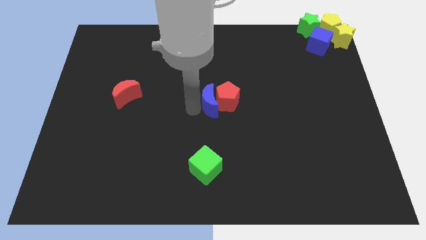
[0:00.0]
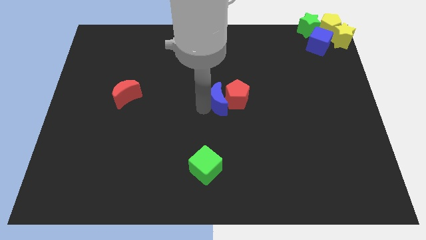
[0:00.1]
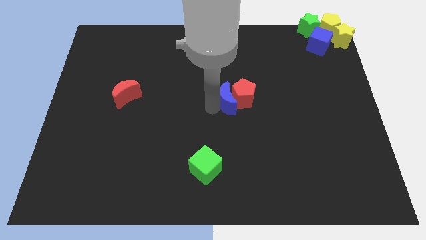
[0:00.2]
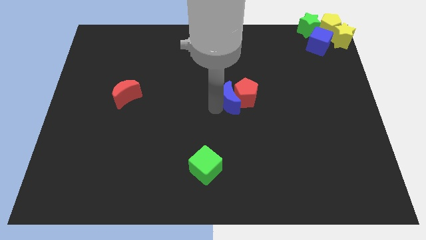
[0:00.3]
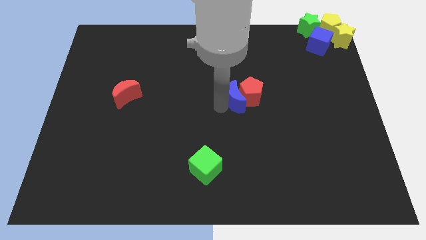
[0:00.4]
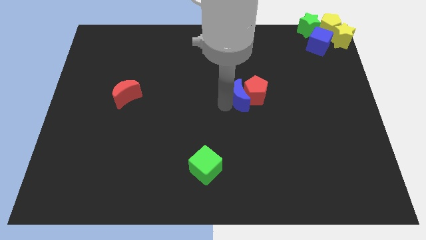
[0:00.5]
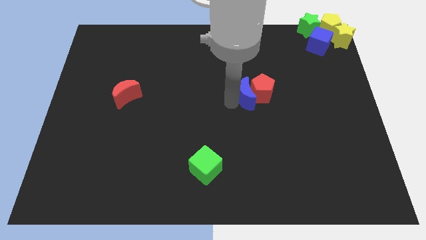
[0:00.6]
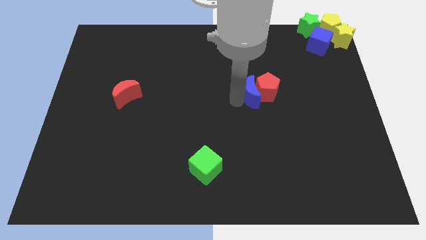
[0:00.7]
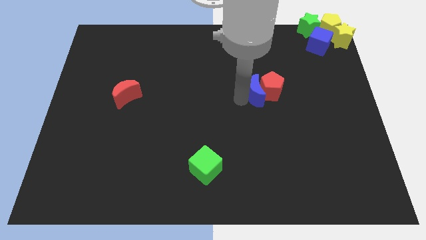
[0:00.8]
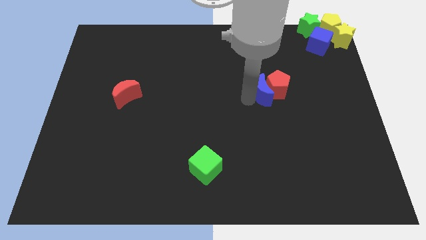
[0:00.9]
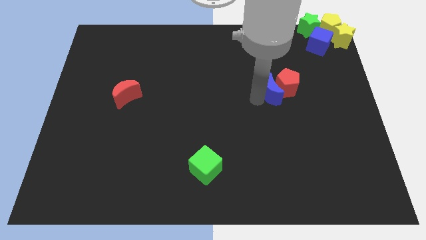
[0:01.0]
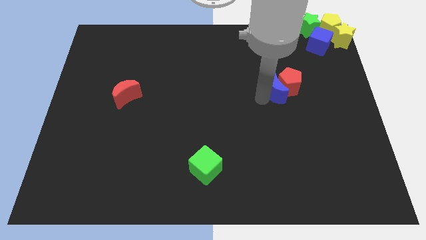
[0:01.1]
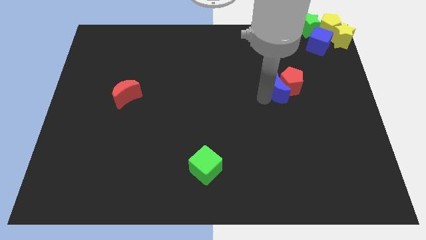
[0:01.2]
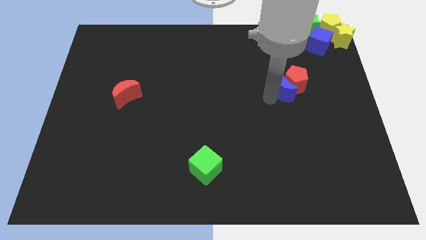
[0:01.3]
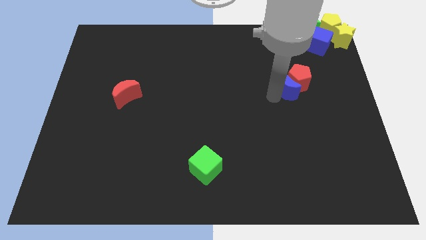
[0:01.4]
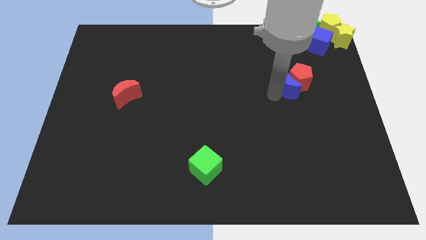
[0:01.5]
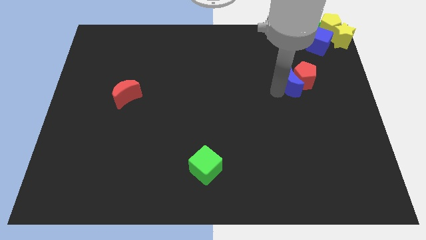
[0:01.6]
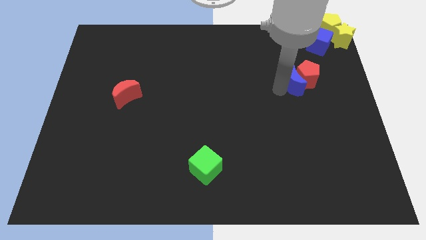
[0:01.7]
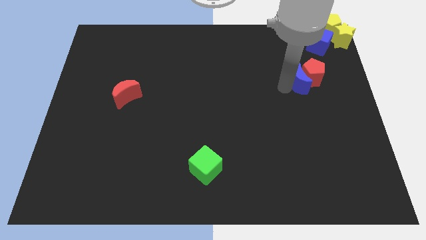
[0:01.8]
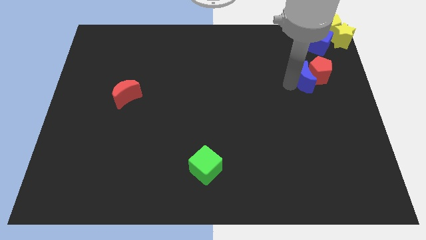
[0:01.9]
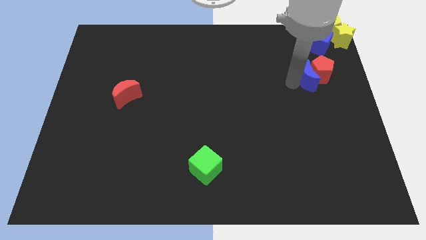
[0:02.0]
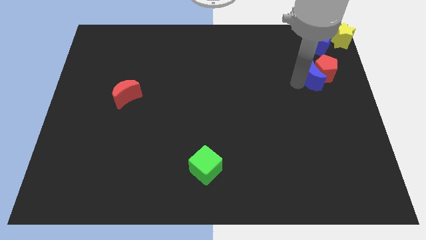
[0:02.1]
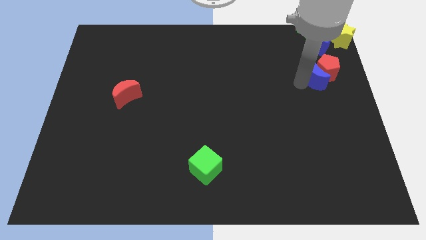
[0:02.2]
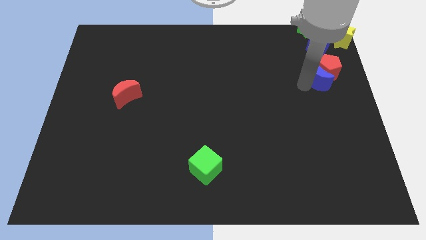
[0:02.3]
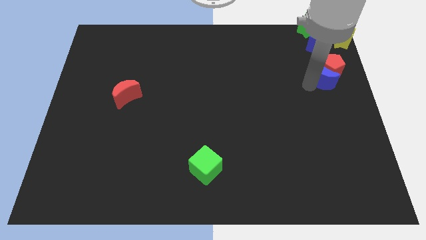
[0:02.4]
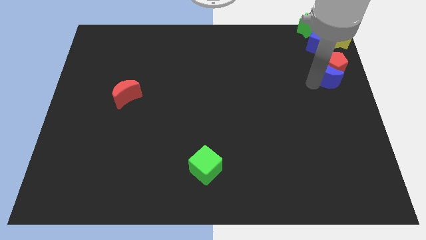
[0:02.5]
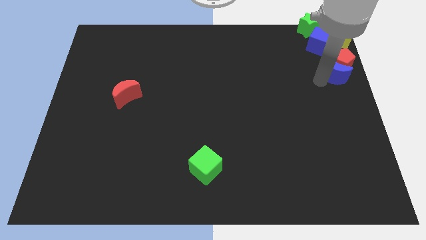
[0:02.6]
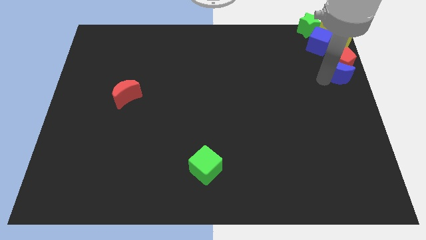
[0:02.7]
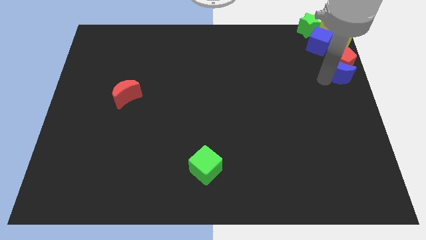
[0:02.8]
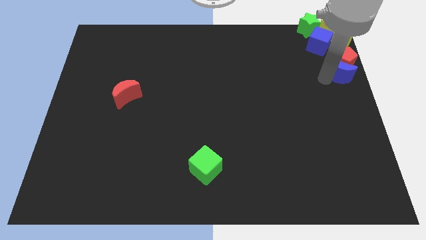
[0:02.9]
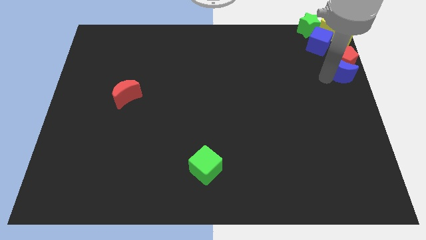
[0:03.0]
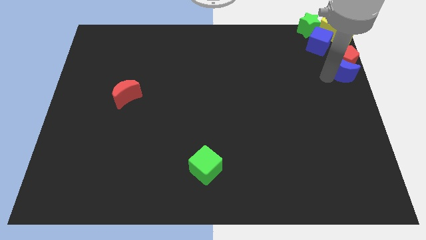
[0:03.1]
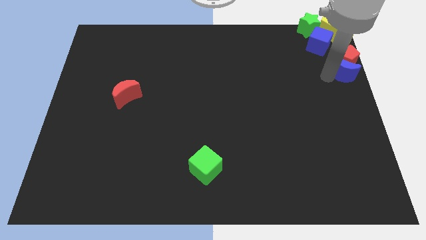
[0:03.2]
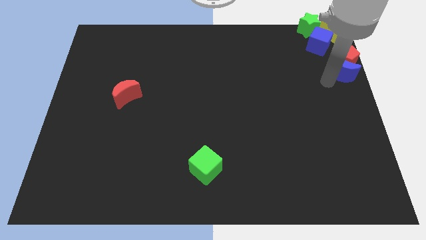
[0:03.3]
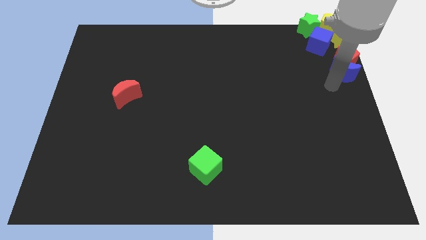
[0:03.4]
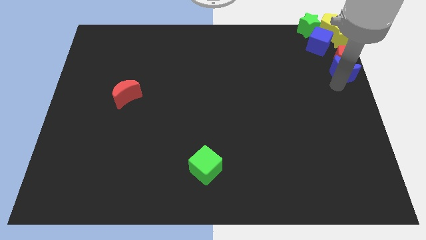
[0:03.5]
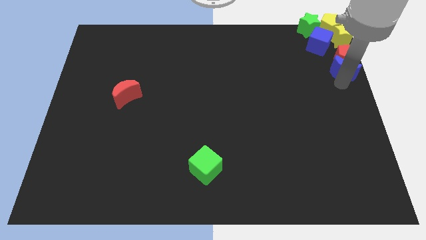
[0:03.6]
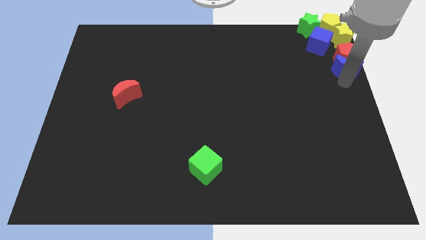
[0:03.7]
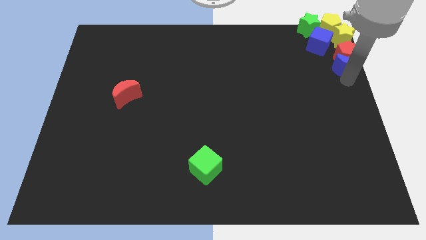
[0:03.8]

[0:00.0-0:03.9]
push the red pentagon with a blue moon to the group of blocks

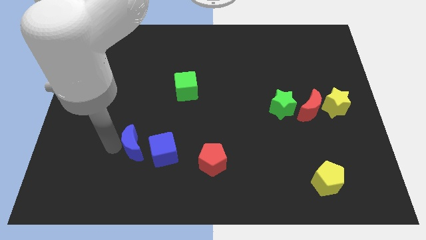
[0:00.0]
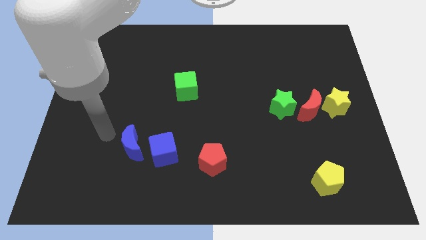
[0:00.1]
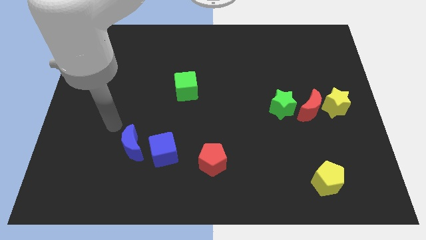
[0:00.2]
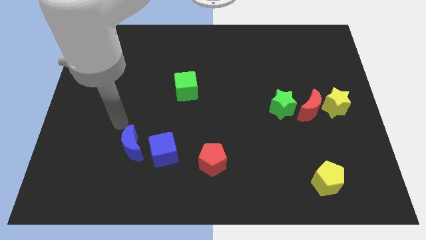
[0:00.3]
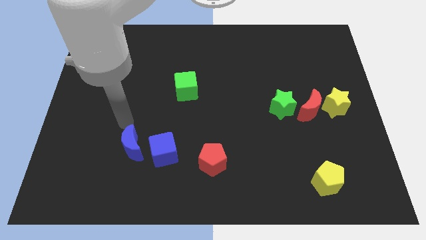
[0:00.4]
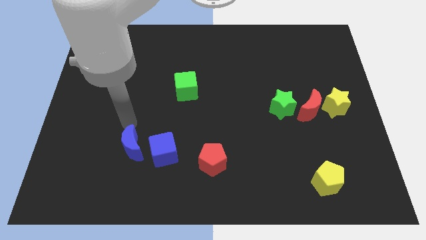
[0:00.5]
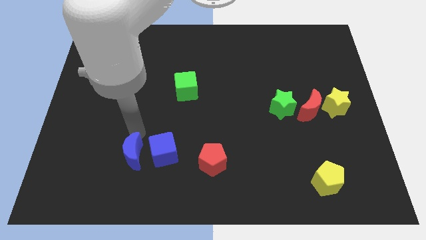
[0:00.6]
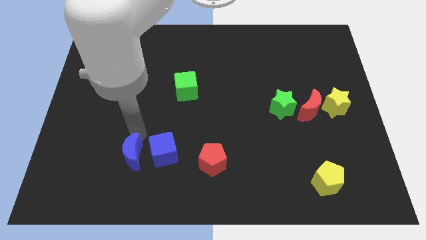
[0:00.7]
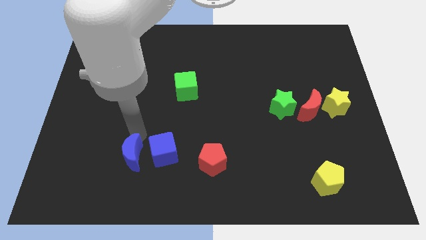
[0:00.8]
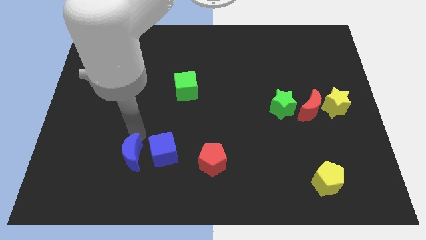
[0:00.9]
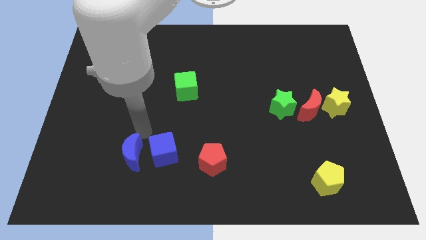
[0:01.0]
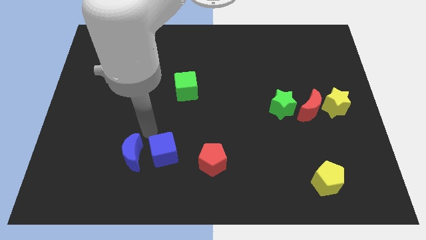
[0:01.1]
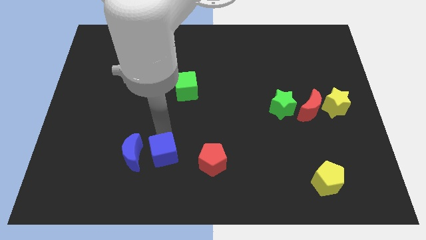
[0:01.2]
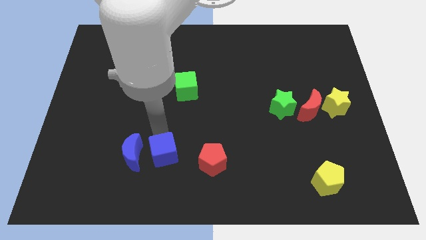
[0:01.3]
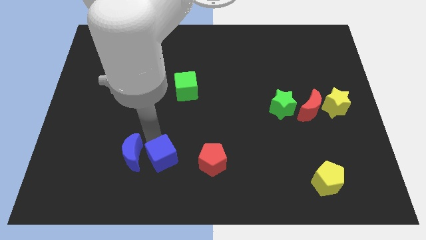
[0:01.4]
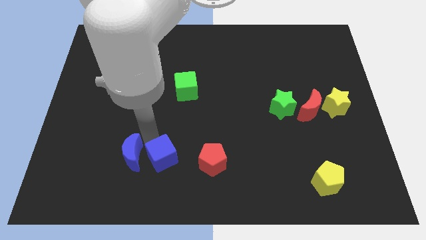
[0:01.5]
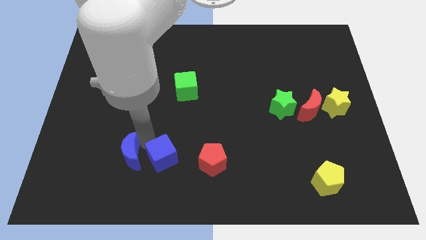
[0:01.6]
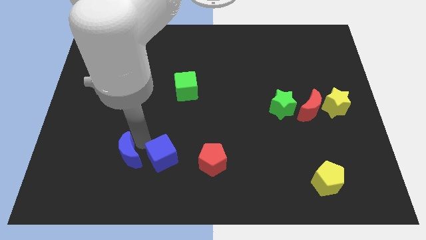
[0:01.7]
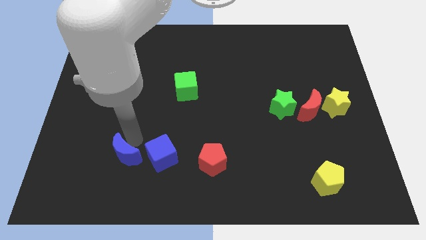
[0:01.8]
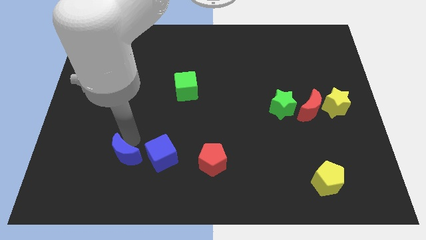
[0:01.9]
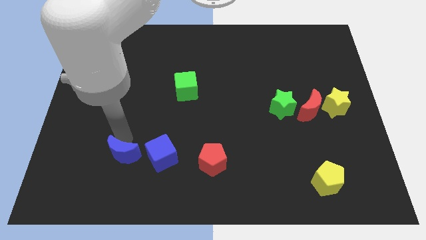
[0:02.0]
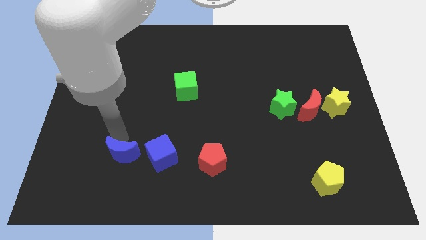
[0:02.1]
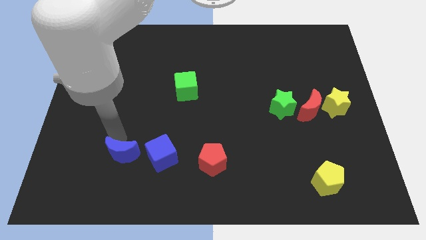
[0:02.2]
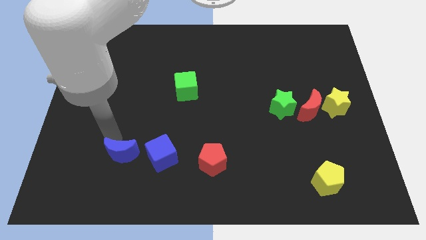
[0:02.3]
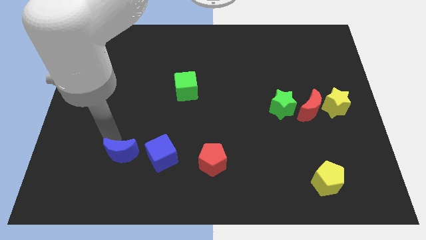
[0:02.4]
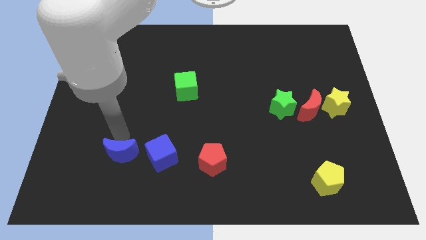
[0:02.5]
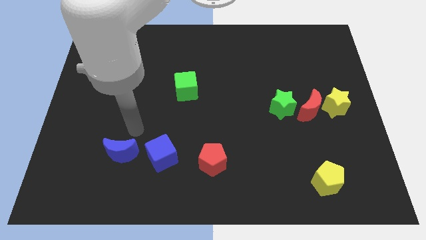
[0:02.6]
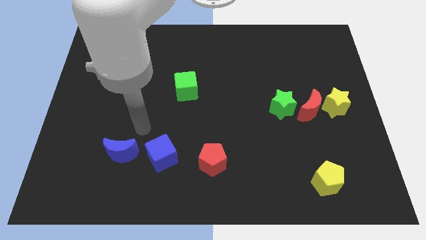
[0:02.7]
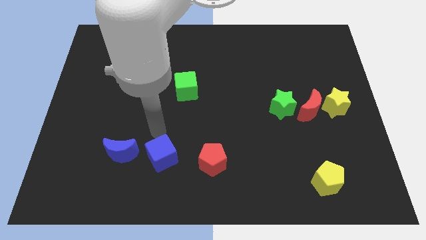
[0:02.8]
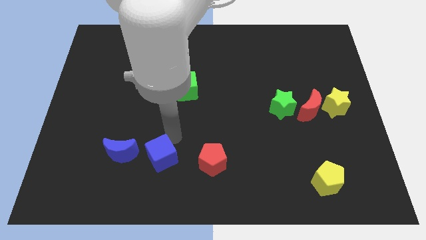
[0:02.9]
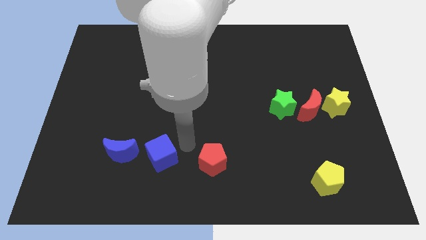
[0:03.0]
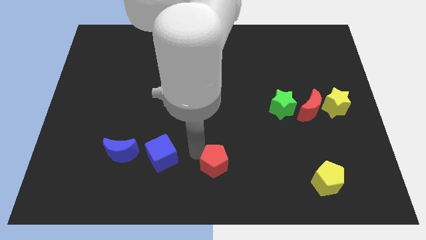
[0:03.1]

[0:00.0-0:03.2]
adjust both the blue blocks at the left side of the red pentagon

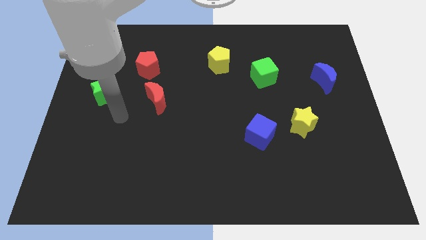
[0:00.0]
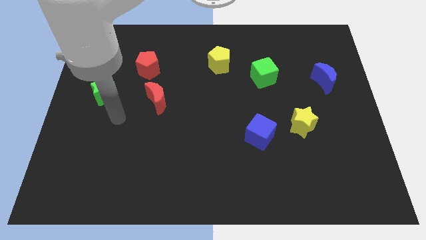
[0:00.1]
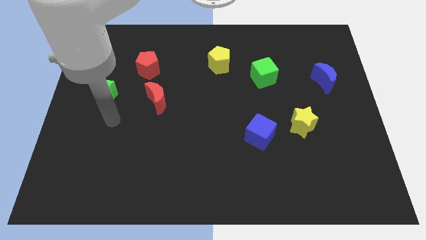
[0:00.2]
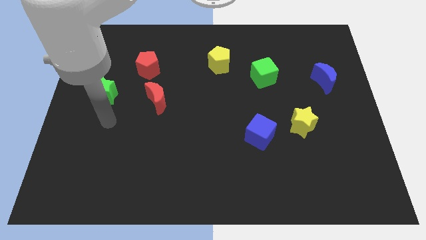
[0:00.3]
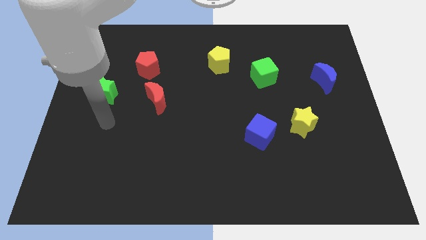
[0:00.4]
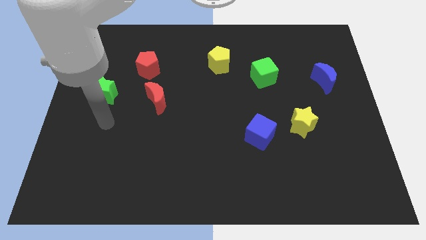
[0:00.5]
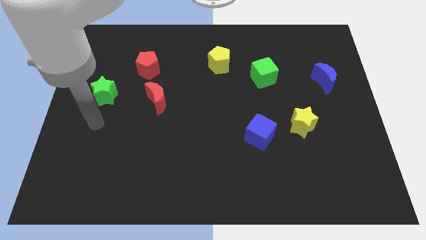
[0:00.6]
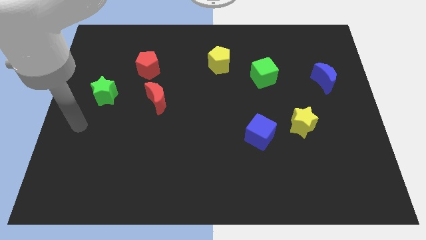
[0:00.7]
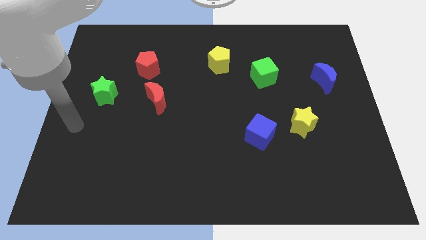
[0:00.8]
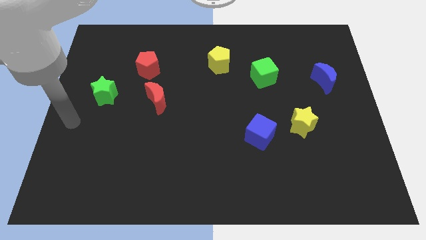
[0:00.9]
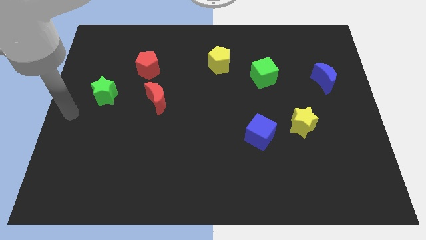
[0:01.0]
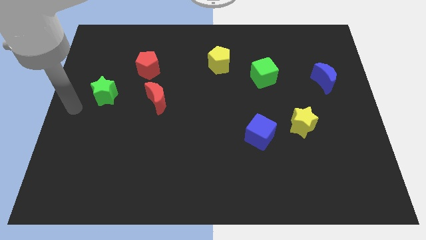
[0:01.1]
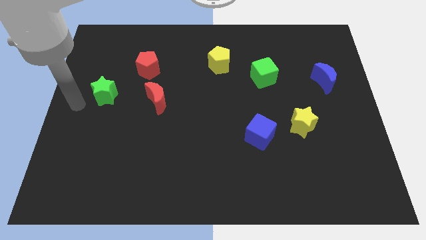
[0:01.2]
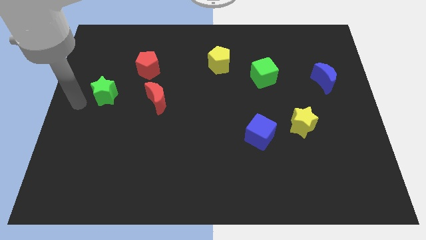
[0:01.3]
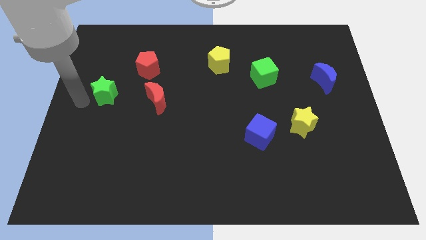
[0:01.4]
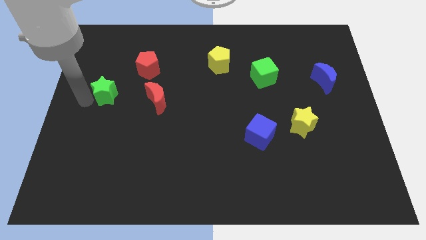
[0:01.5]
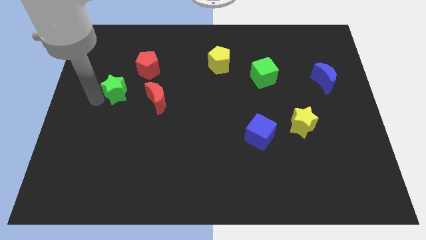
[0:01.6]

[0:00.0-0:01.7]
move arm to the left of green star

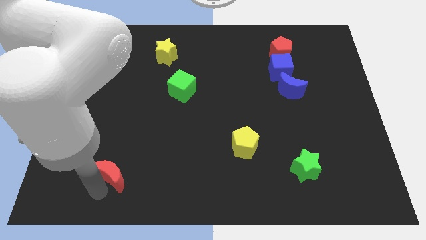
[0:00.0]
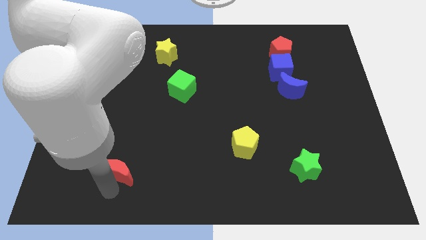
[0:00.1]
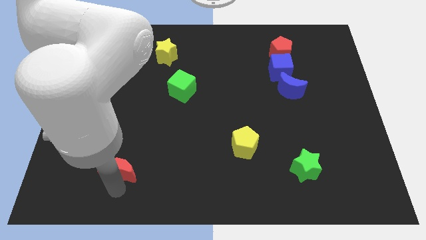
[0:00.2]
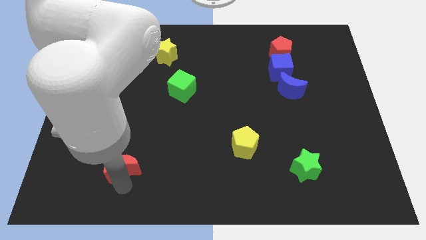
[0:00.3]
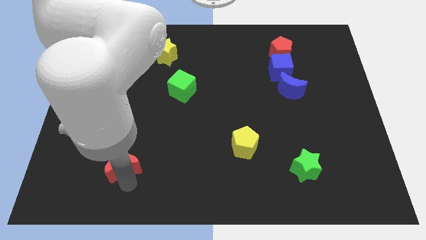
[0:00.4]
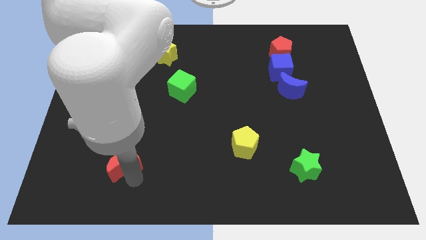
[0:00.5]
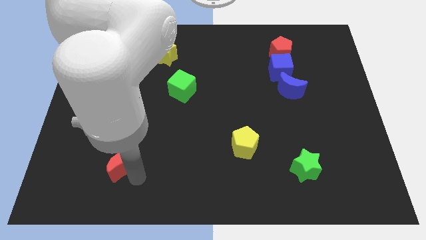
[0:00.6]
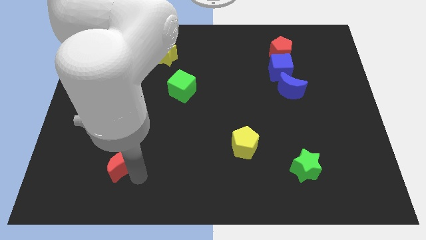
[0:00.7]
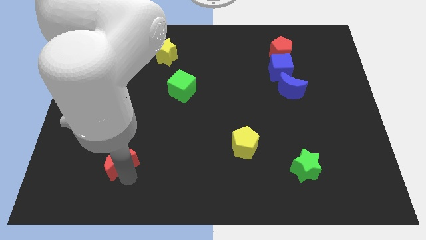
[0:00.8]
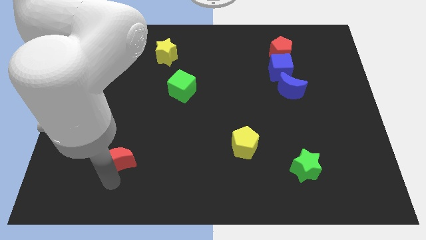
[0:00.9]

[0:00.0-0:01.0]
push the red crescent to the top of the board
